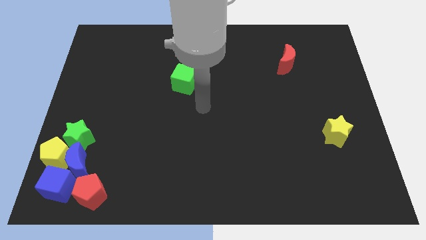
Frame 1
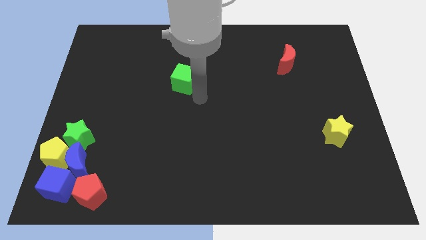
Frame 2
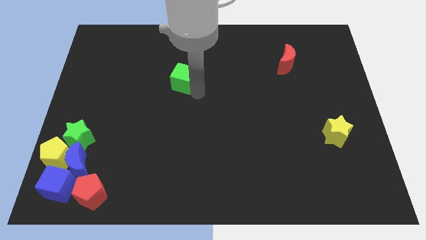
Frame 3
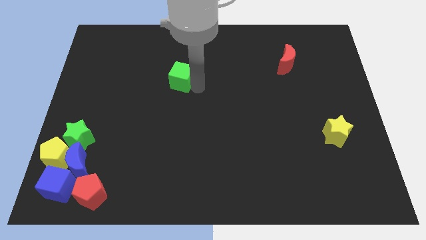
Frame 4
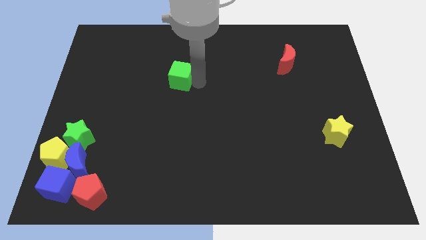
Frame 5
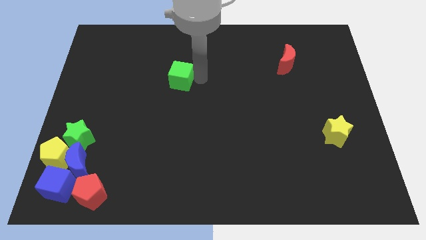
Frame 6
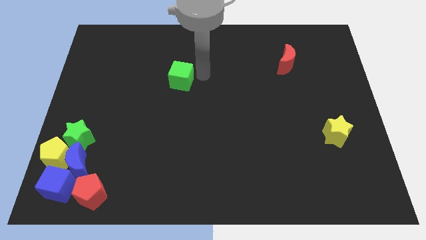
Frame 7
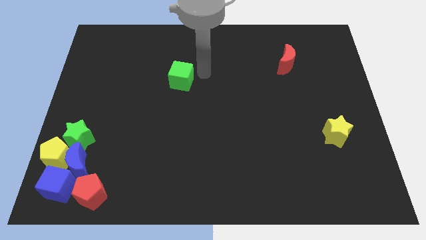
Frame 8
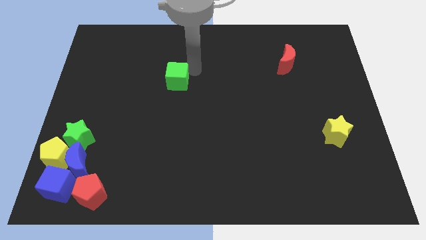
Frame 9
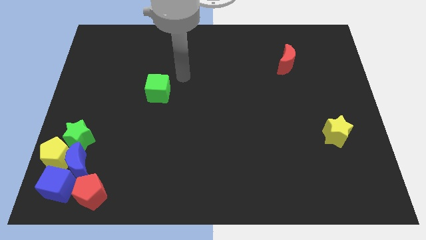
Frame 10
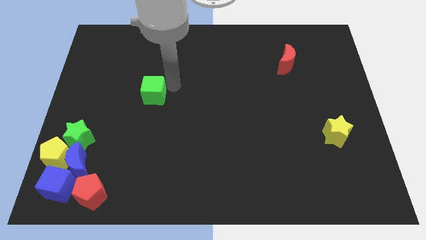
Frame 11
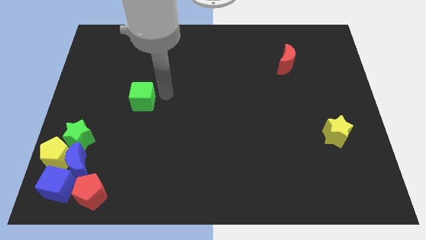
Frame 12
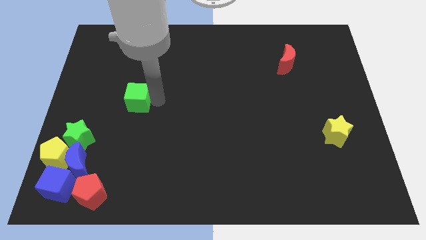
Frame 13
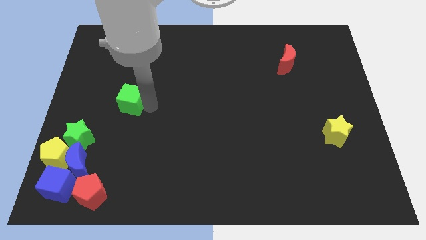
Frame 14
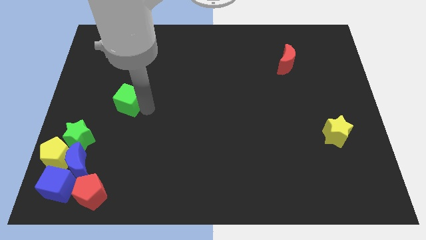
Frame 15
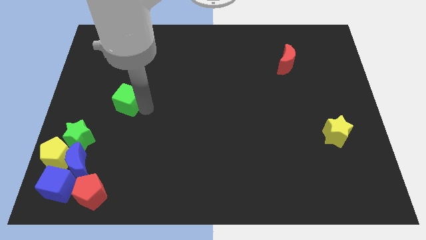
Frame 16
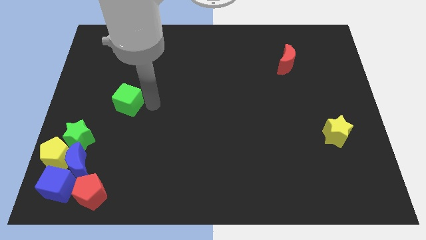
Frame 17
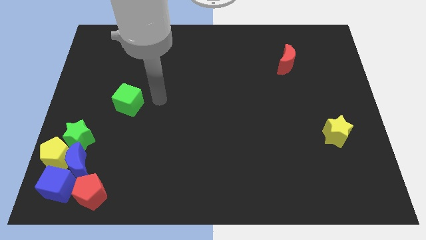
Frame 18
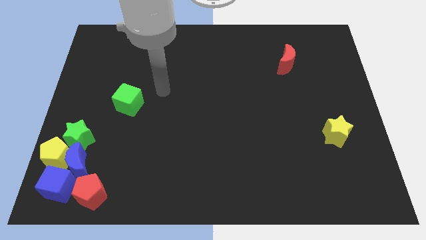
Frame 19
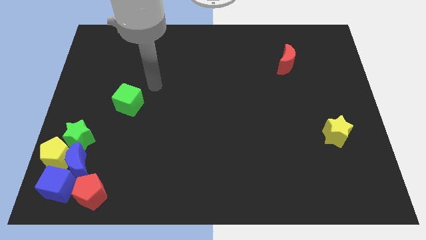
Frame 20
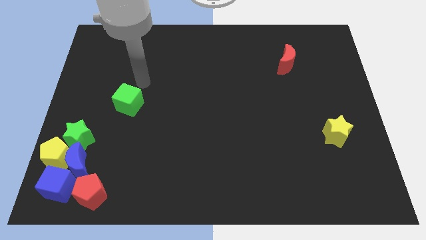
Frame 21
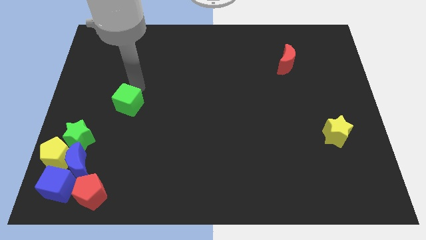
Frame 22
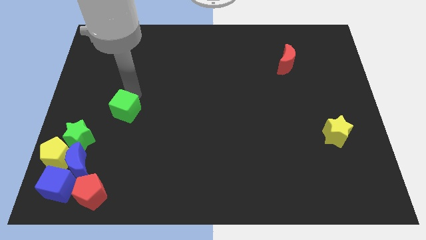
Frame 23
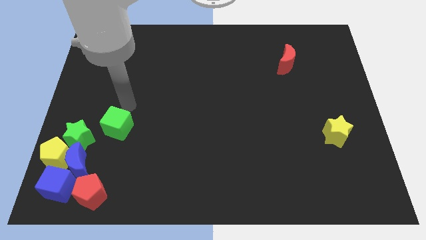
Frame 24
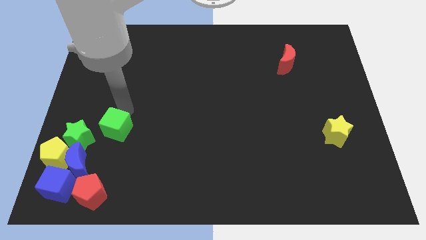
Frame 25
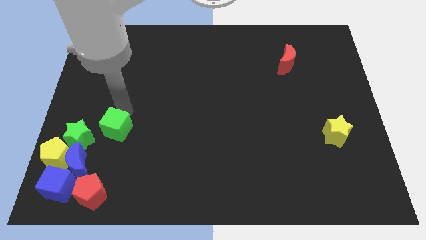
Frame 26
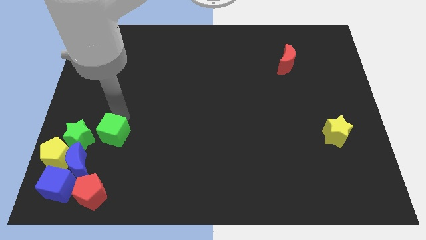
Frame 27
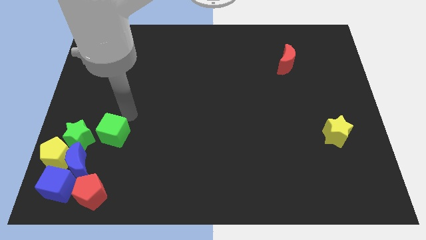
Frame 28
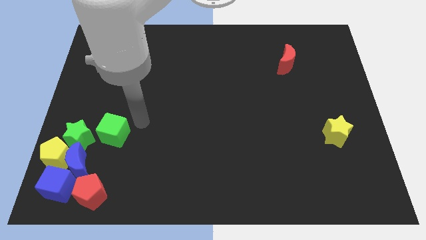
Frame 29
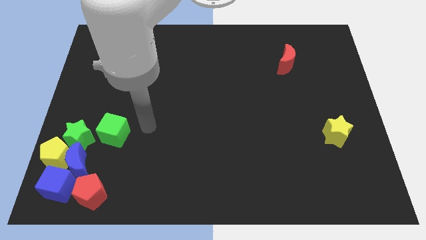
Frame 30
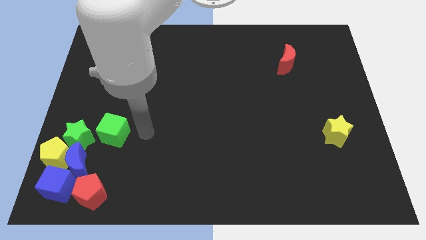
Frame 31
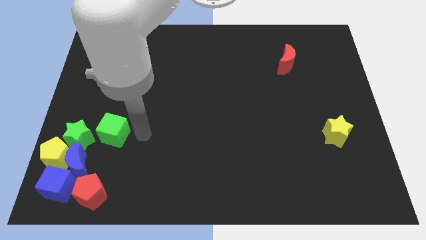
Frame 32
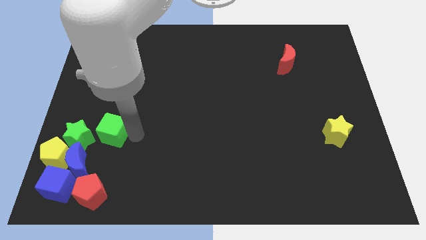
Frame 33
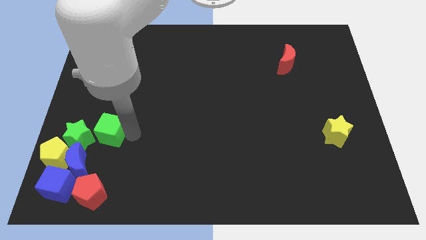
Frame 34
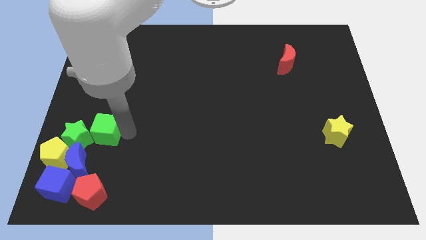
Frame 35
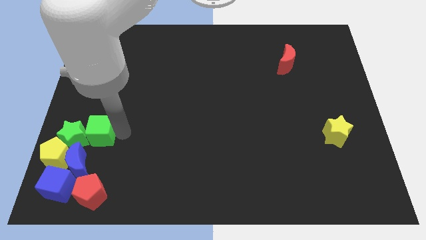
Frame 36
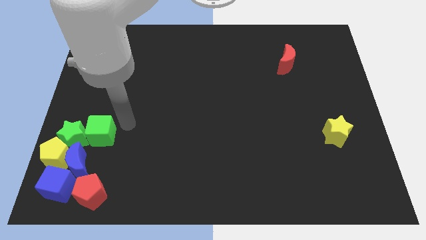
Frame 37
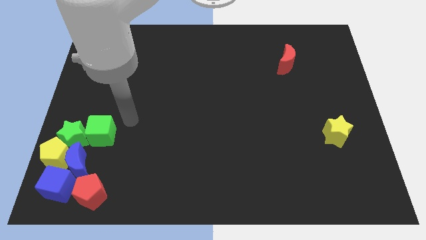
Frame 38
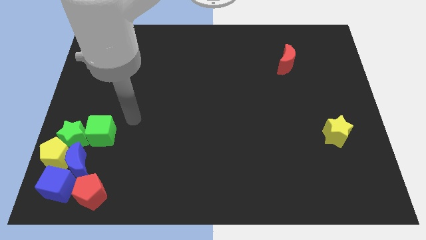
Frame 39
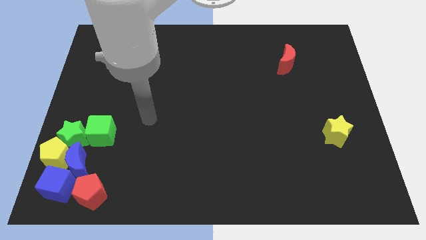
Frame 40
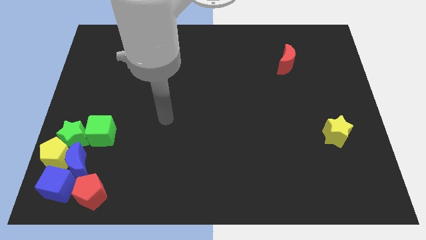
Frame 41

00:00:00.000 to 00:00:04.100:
place the green cube to the right side of the green star

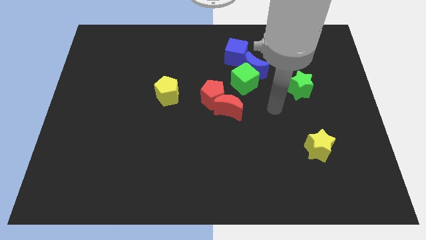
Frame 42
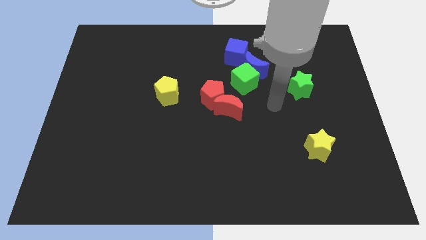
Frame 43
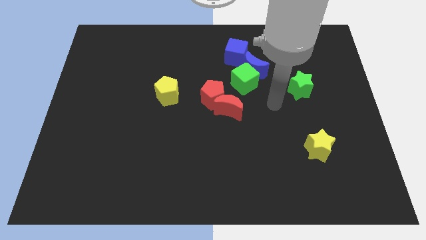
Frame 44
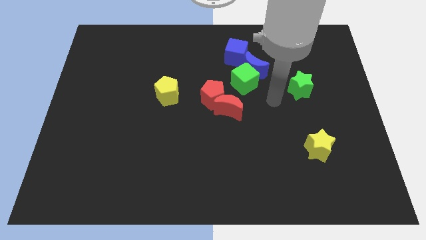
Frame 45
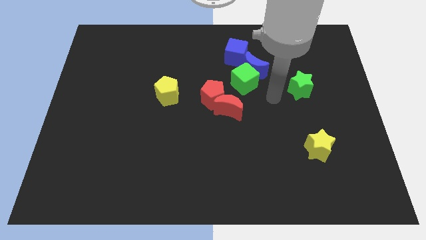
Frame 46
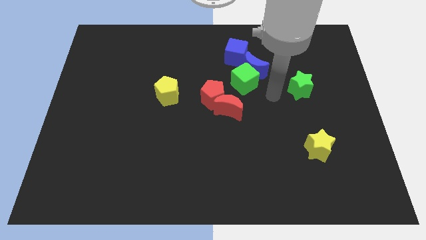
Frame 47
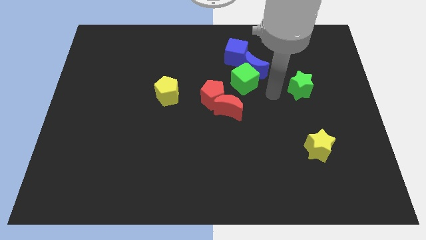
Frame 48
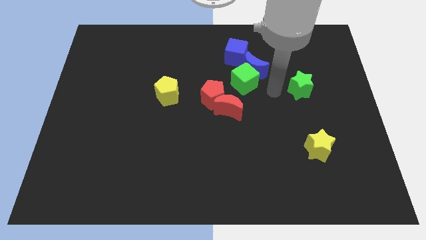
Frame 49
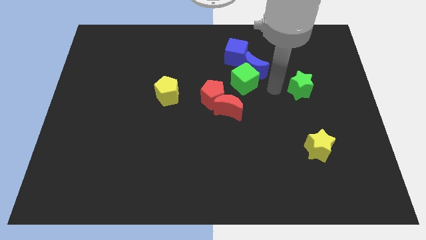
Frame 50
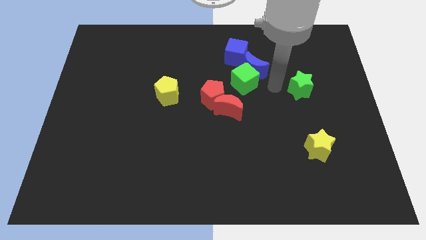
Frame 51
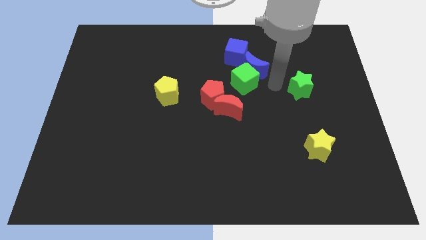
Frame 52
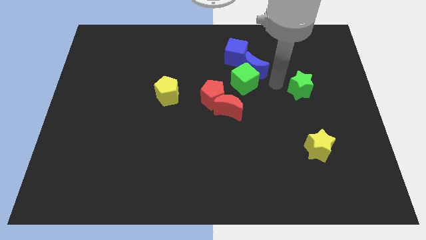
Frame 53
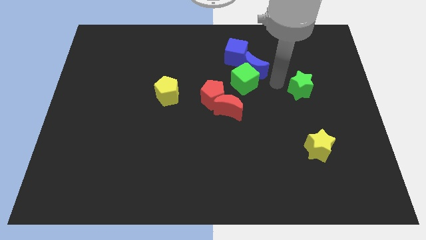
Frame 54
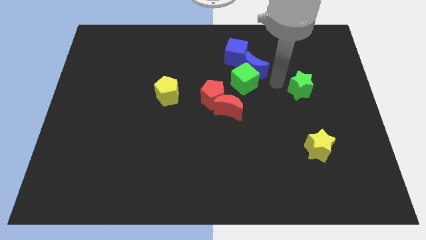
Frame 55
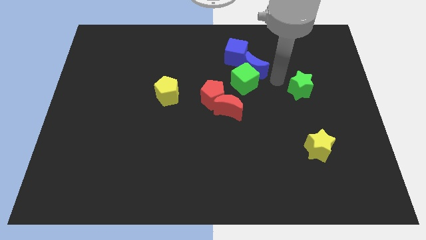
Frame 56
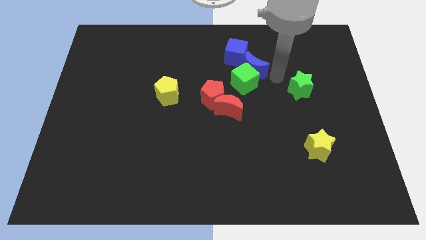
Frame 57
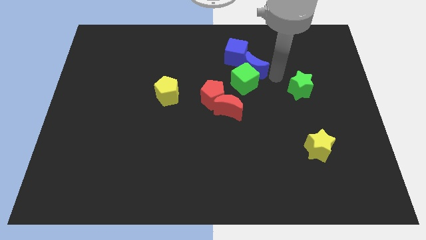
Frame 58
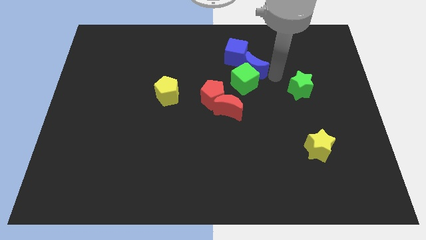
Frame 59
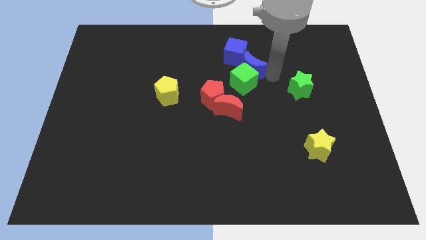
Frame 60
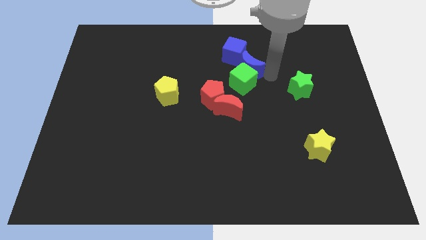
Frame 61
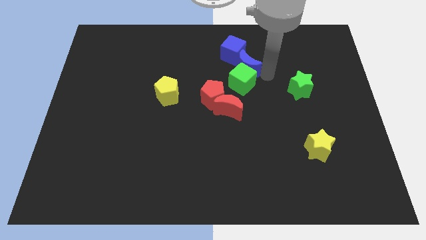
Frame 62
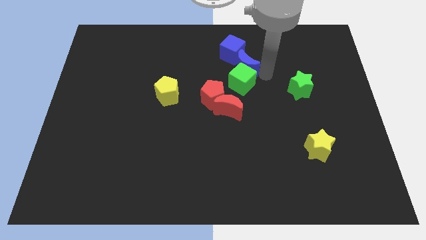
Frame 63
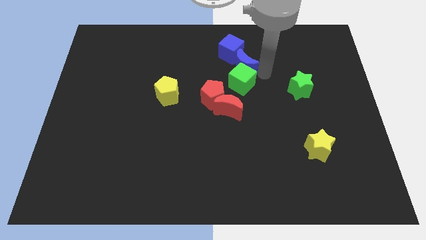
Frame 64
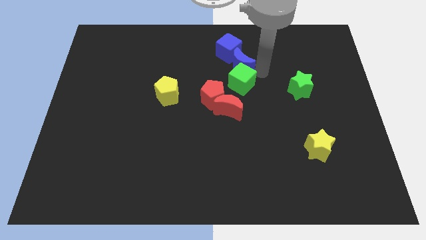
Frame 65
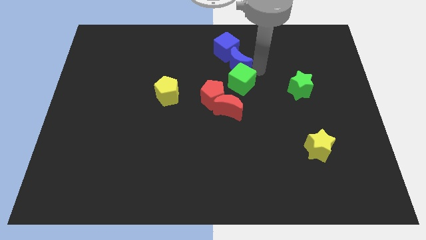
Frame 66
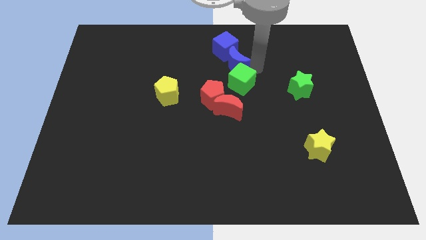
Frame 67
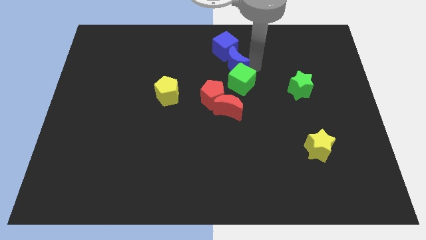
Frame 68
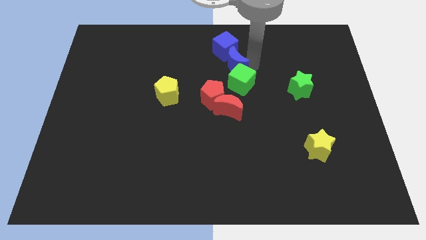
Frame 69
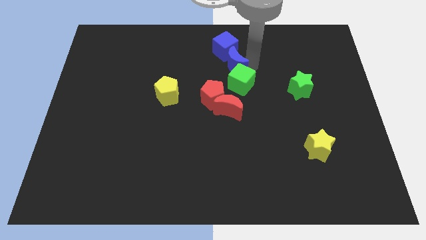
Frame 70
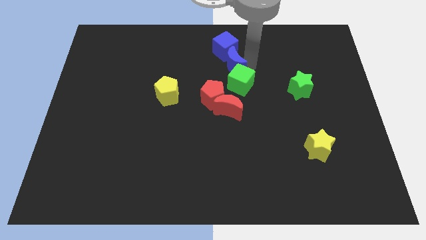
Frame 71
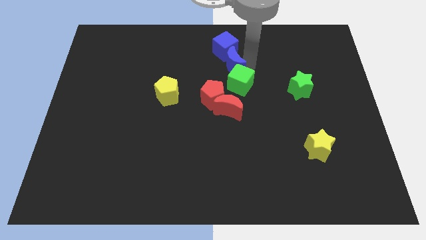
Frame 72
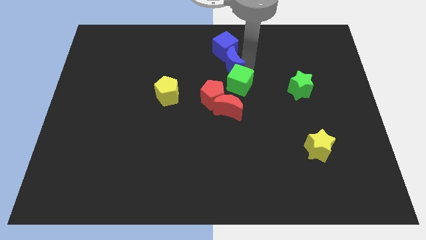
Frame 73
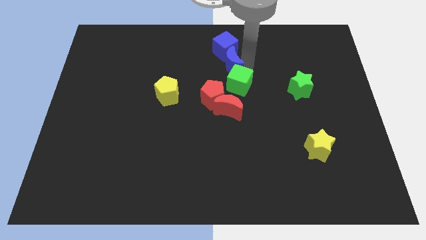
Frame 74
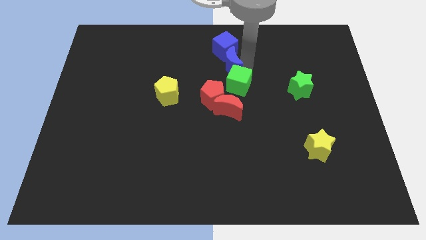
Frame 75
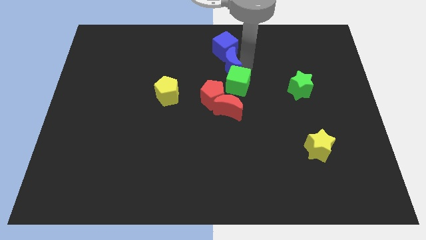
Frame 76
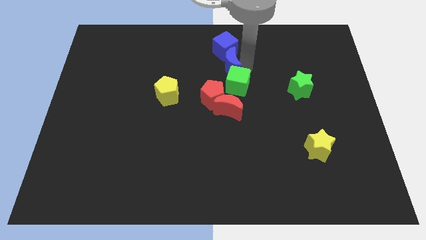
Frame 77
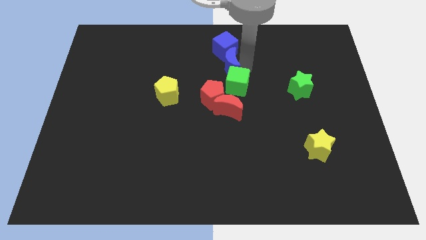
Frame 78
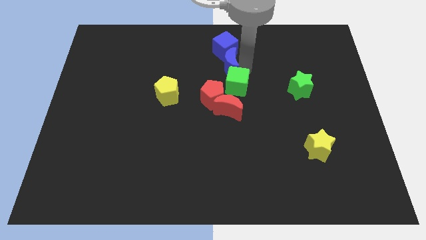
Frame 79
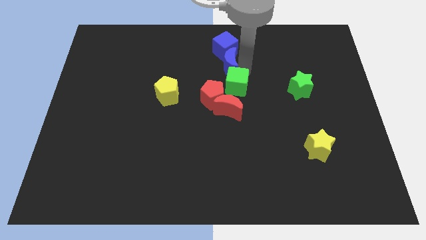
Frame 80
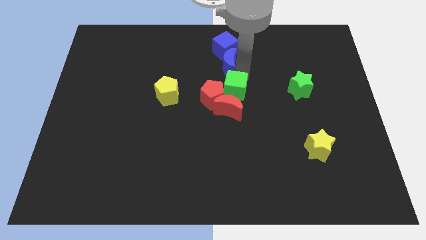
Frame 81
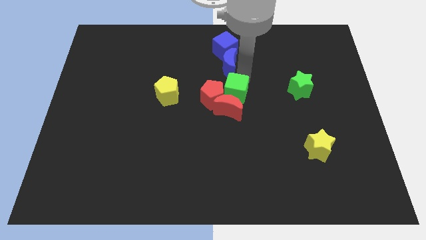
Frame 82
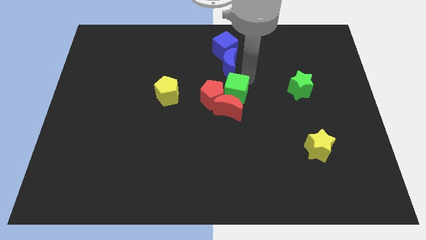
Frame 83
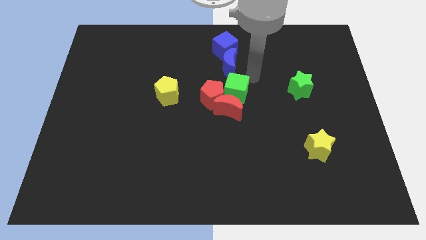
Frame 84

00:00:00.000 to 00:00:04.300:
separate the green cube from the blue blocks

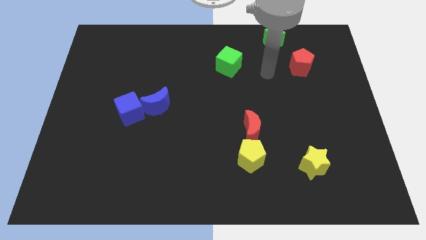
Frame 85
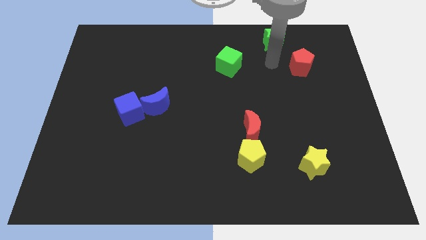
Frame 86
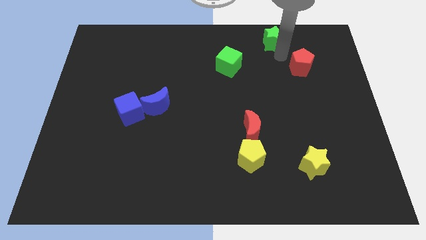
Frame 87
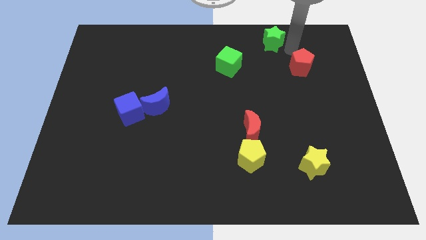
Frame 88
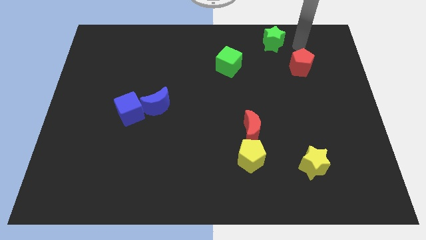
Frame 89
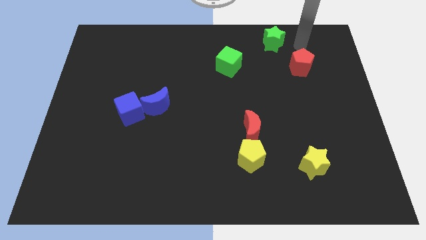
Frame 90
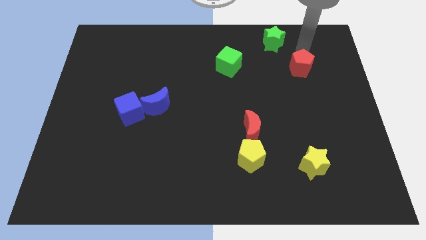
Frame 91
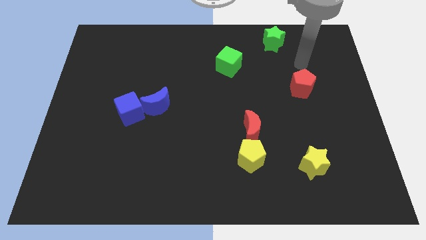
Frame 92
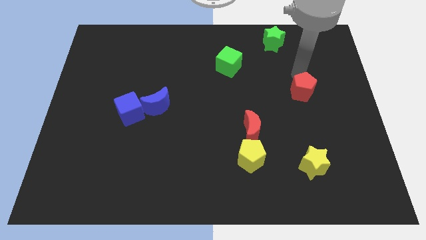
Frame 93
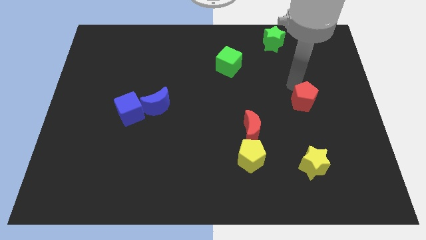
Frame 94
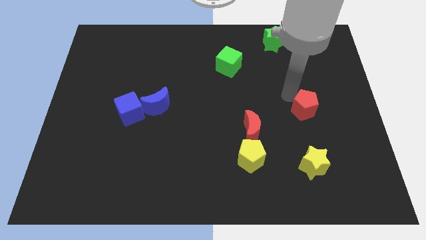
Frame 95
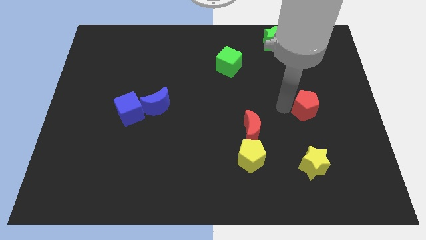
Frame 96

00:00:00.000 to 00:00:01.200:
push the red pentagon slightly to the bottom side of the board
